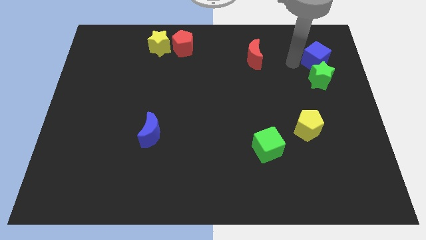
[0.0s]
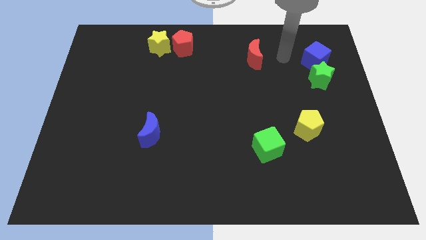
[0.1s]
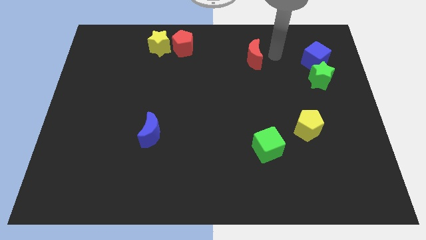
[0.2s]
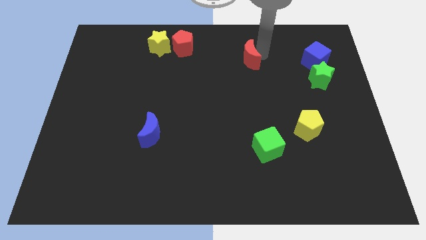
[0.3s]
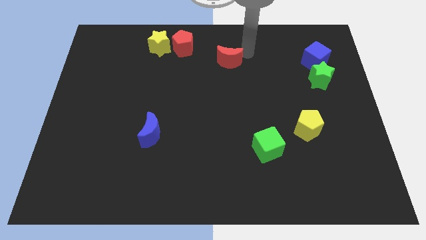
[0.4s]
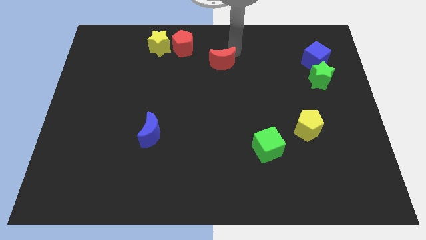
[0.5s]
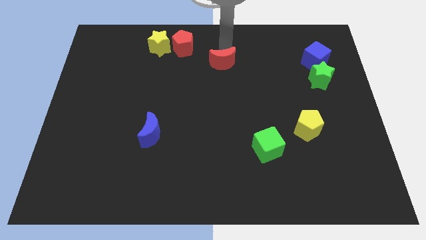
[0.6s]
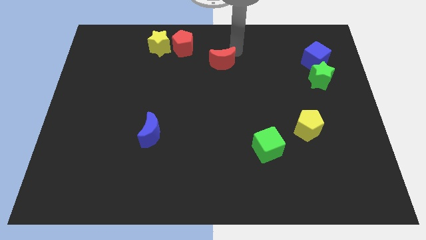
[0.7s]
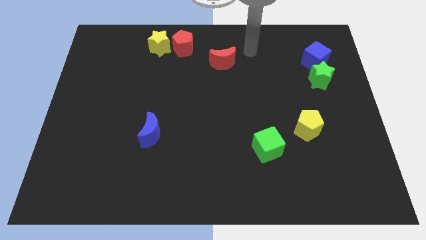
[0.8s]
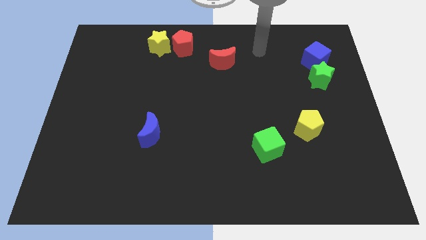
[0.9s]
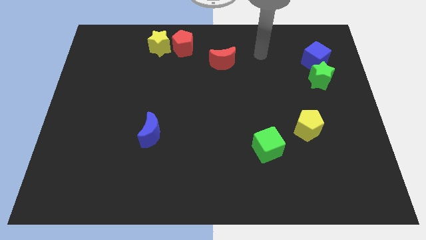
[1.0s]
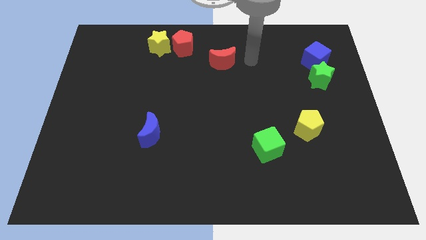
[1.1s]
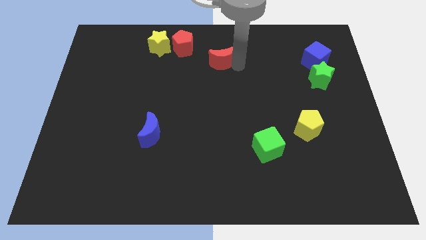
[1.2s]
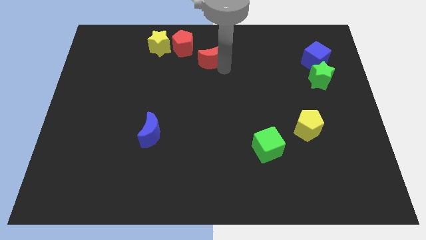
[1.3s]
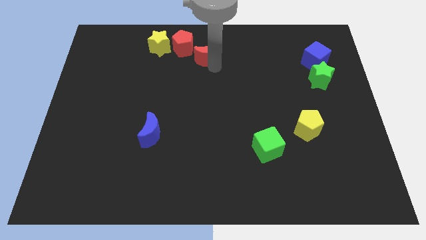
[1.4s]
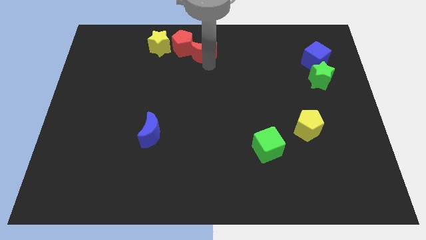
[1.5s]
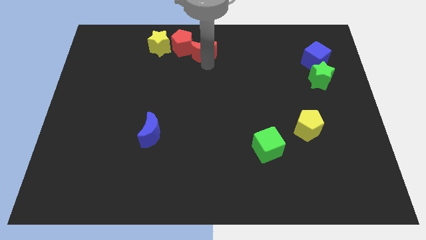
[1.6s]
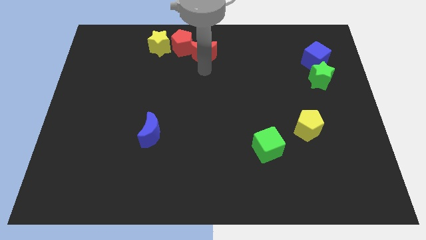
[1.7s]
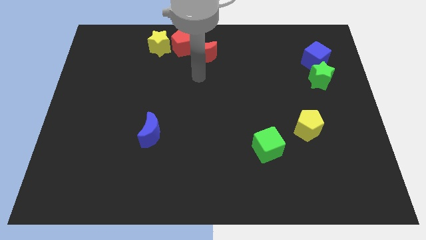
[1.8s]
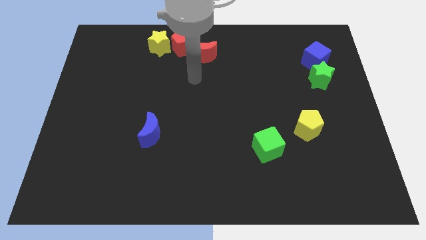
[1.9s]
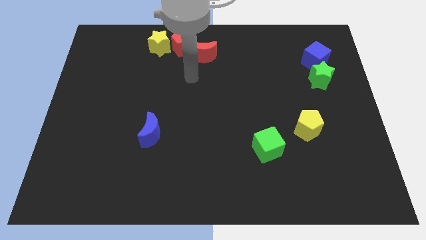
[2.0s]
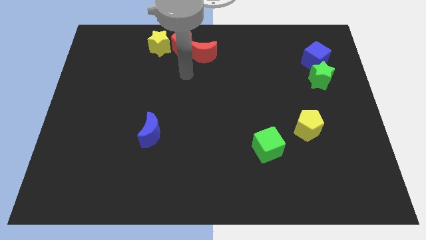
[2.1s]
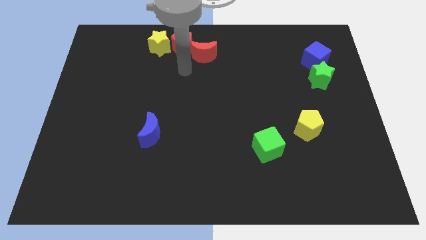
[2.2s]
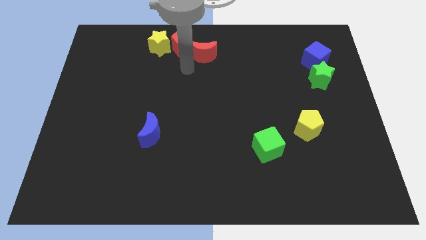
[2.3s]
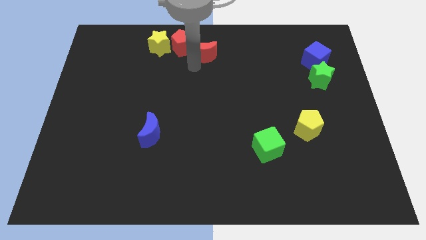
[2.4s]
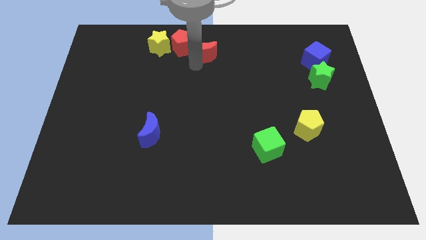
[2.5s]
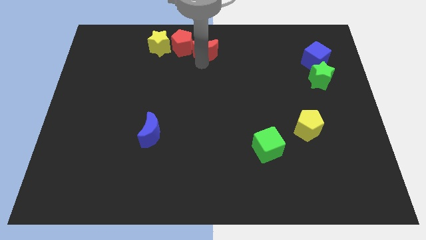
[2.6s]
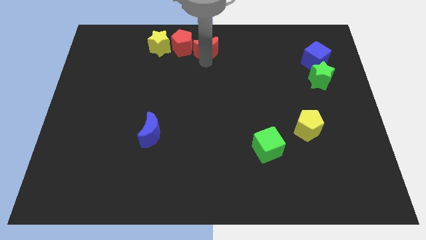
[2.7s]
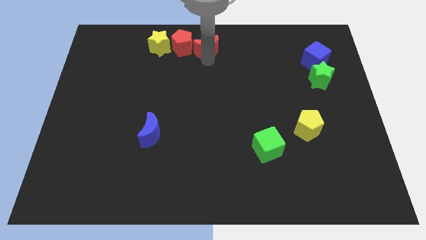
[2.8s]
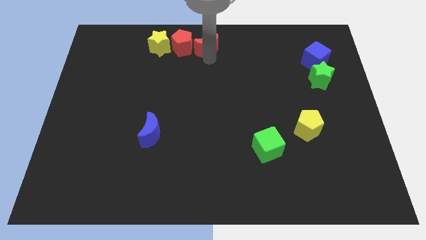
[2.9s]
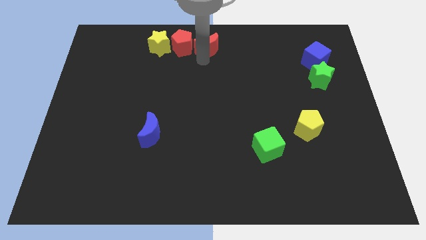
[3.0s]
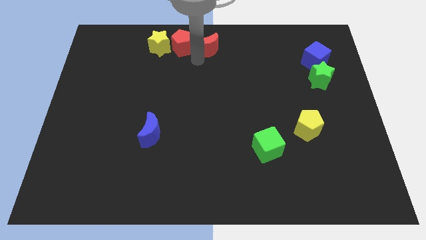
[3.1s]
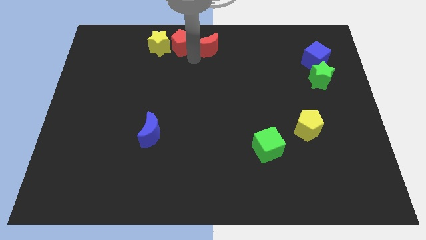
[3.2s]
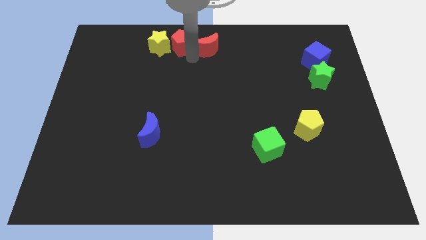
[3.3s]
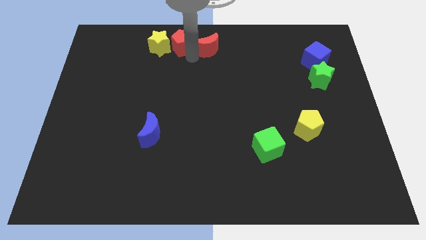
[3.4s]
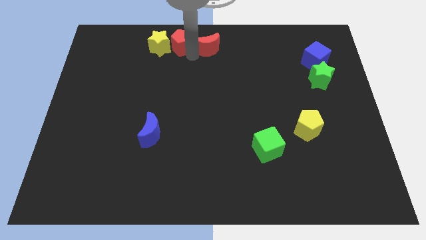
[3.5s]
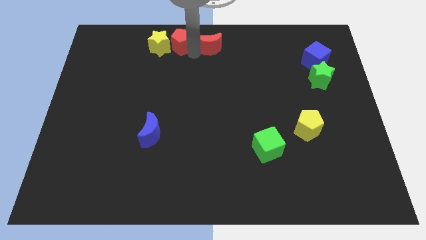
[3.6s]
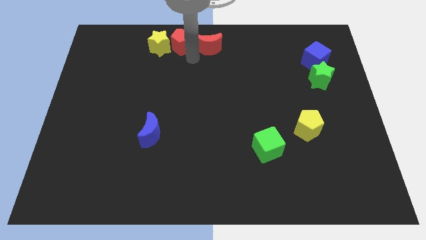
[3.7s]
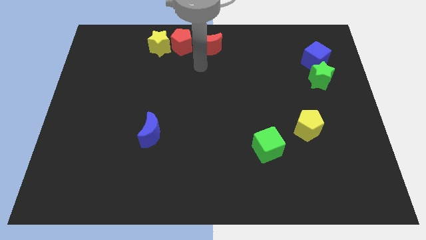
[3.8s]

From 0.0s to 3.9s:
put the red crescent on the right side of the red pentagon

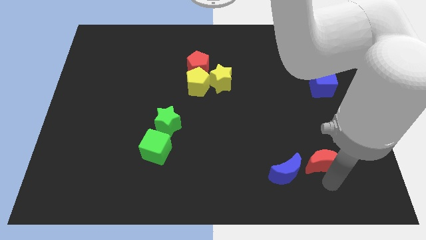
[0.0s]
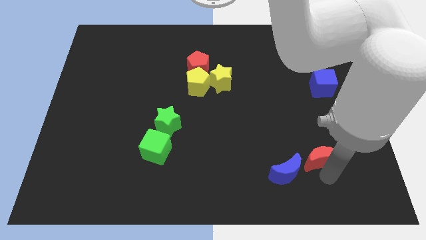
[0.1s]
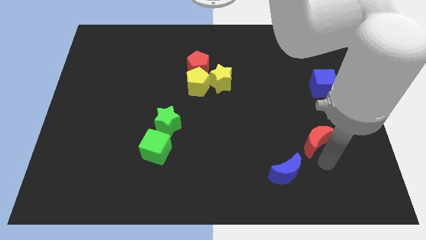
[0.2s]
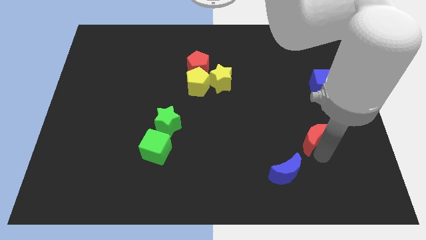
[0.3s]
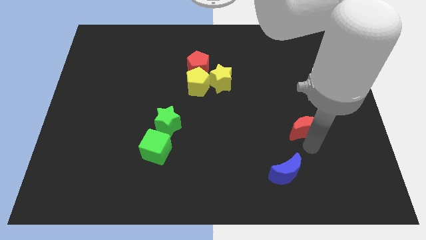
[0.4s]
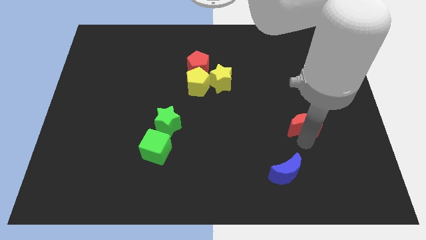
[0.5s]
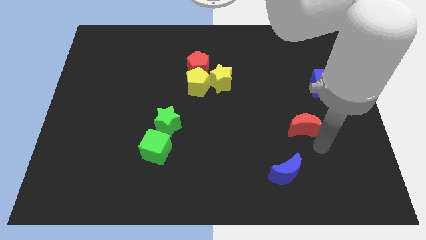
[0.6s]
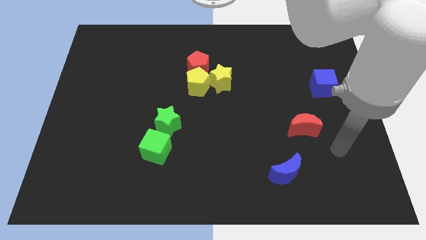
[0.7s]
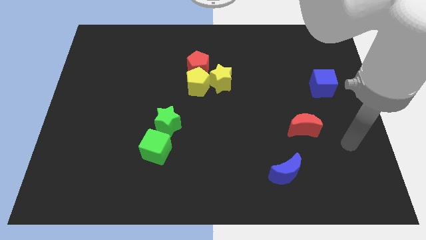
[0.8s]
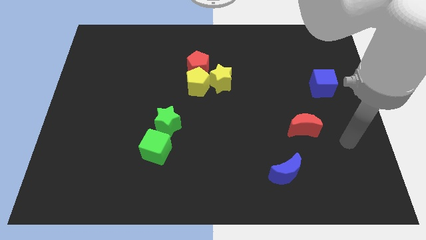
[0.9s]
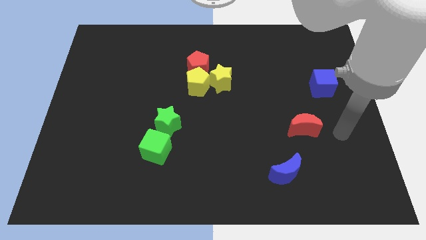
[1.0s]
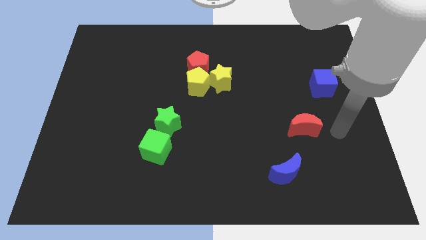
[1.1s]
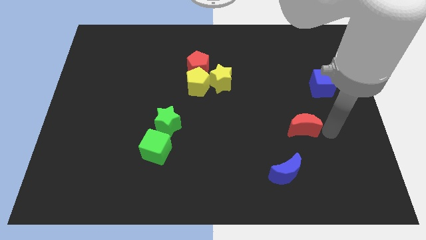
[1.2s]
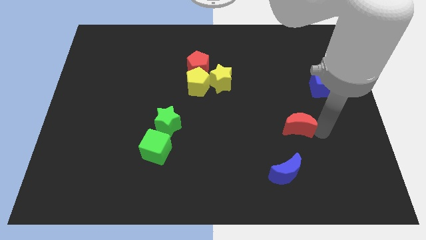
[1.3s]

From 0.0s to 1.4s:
push the red pentagon slightly up

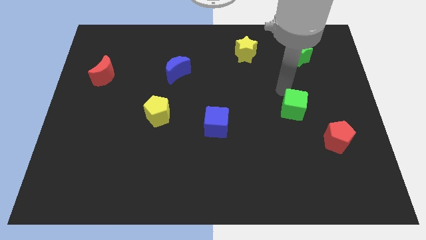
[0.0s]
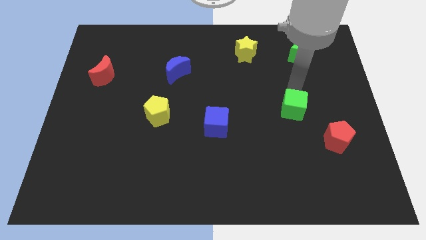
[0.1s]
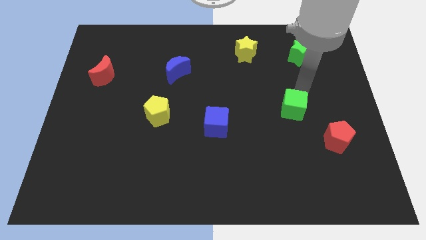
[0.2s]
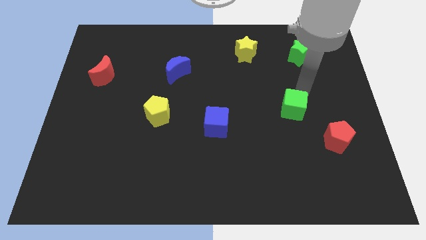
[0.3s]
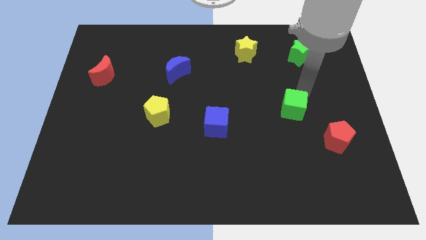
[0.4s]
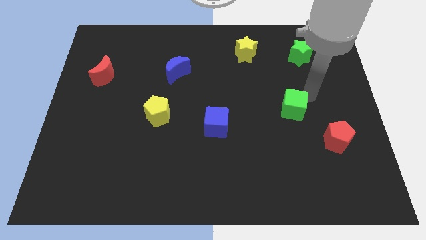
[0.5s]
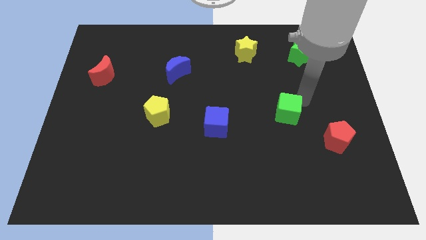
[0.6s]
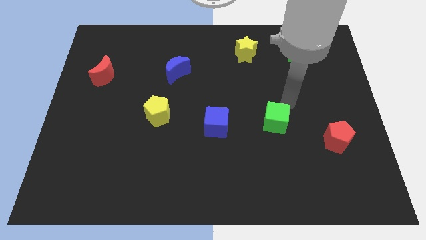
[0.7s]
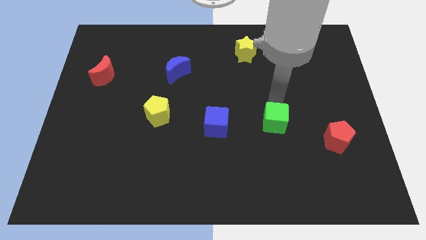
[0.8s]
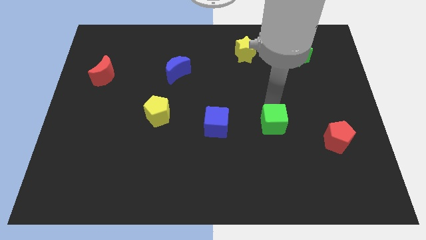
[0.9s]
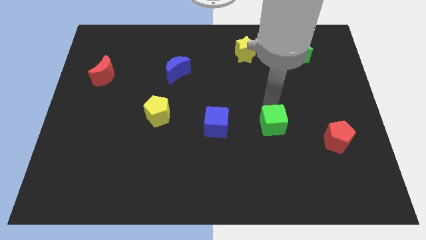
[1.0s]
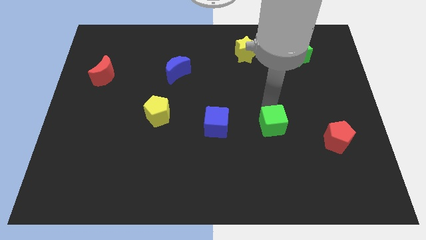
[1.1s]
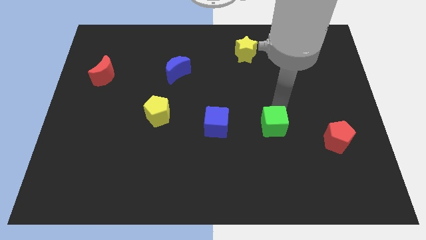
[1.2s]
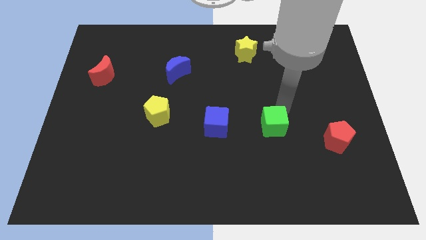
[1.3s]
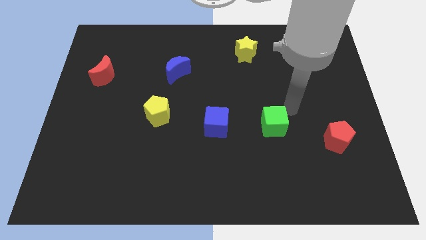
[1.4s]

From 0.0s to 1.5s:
place the green cube right to the blue cube

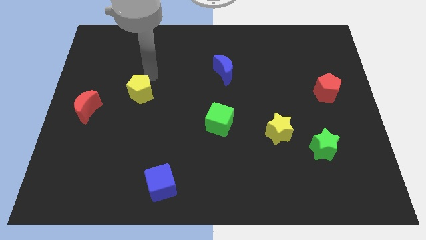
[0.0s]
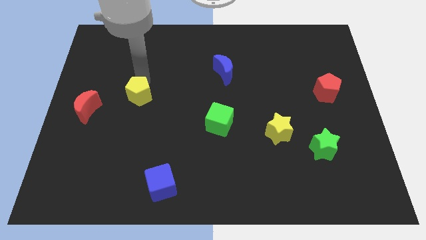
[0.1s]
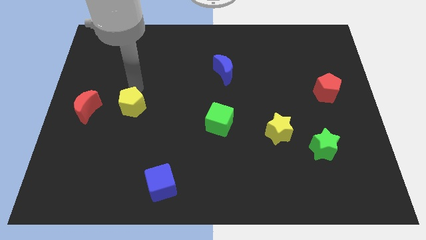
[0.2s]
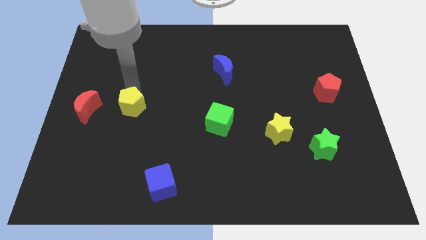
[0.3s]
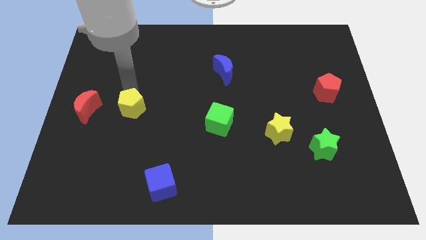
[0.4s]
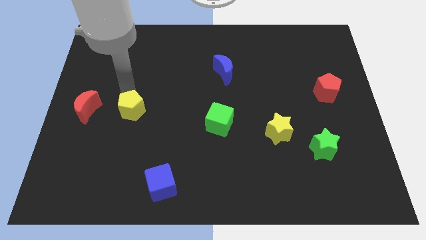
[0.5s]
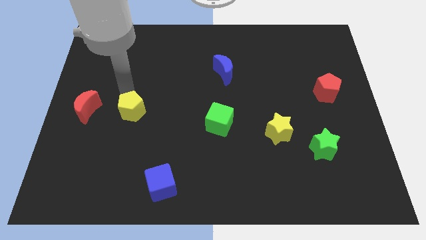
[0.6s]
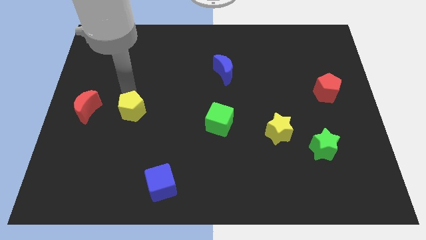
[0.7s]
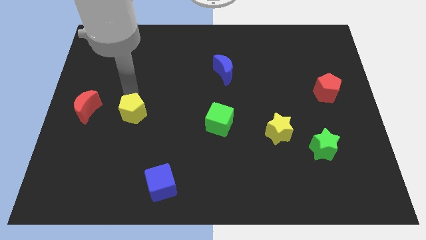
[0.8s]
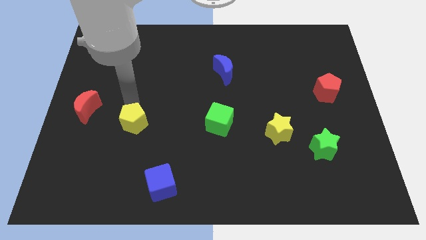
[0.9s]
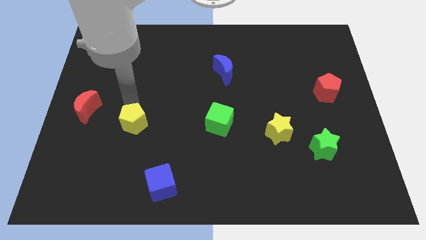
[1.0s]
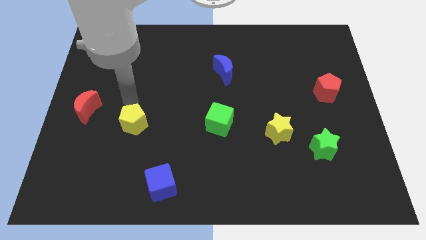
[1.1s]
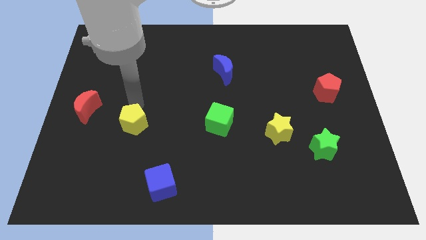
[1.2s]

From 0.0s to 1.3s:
slightly push the yellow pentagon towards the down of the board

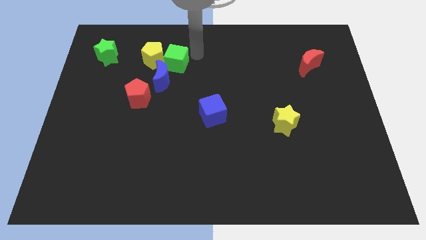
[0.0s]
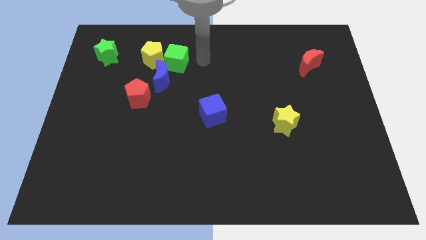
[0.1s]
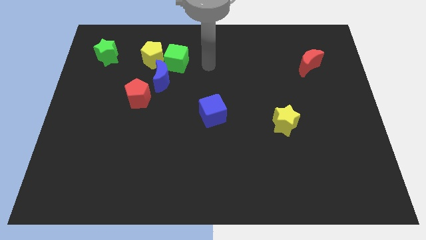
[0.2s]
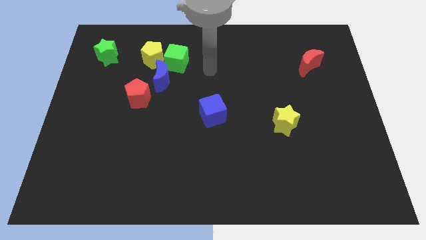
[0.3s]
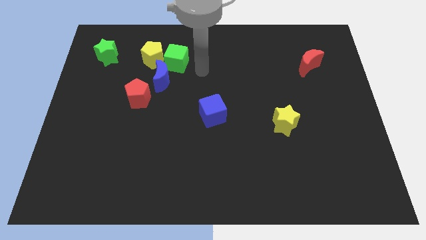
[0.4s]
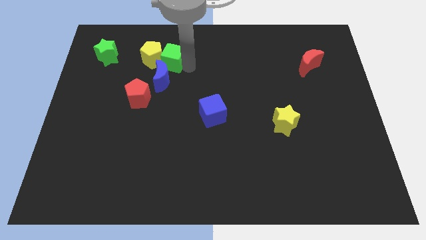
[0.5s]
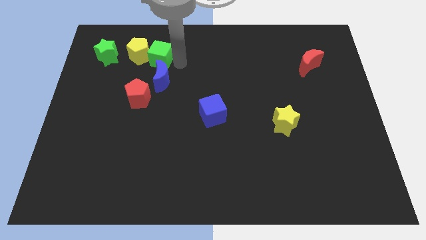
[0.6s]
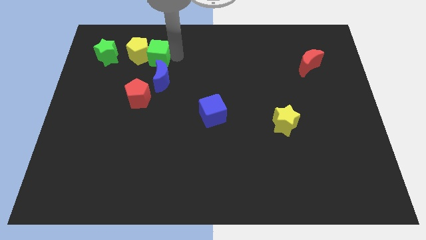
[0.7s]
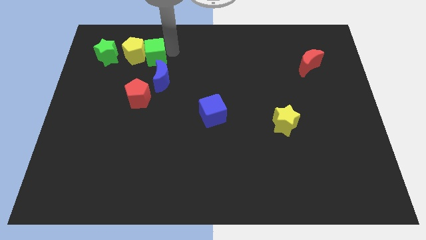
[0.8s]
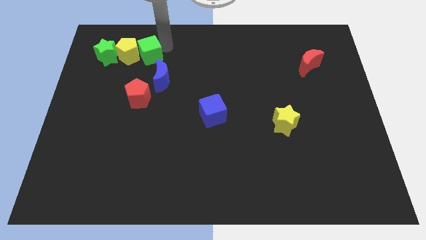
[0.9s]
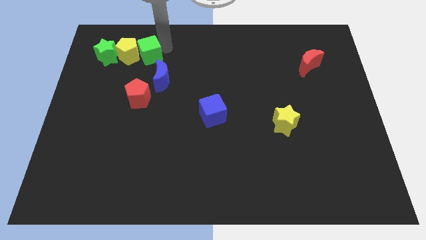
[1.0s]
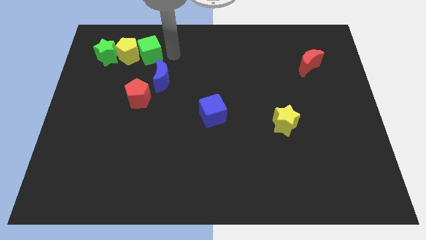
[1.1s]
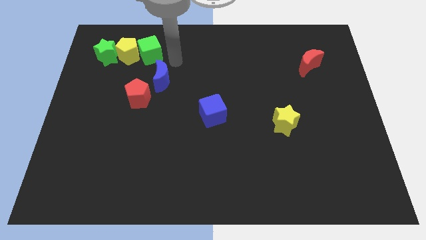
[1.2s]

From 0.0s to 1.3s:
push the green cube and yellow pentagon into the green star
